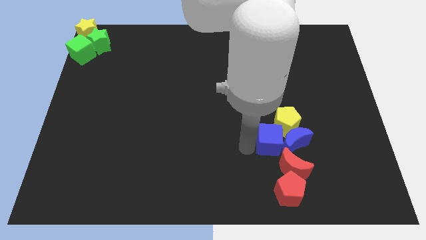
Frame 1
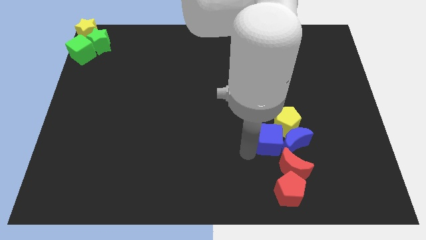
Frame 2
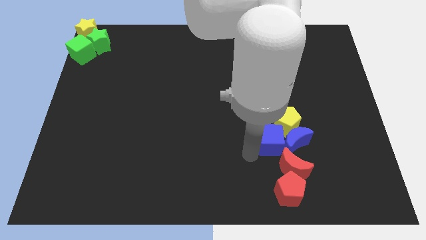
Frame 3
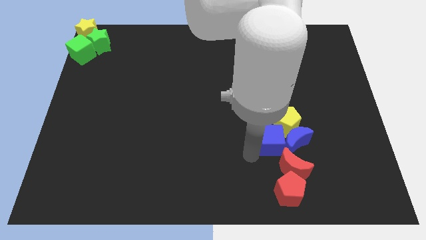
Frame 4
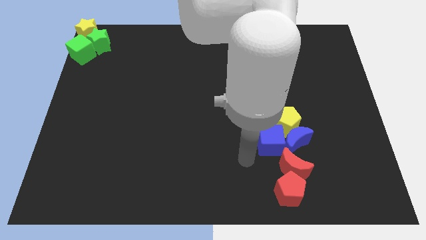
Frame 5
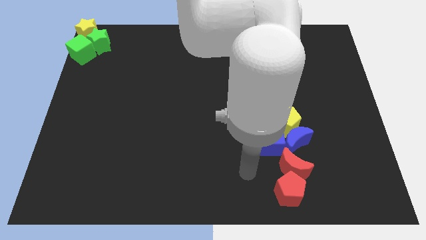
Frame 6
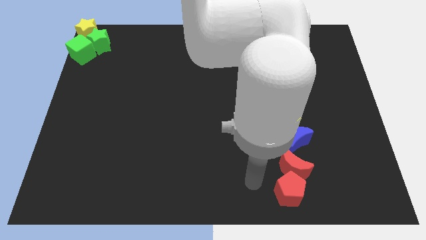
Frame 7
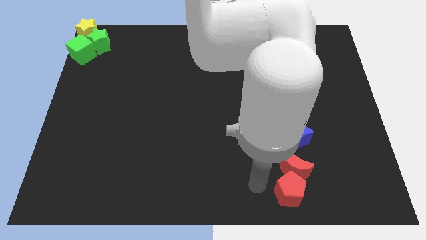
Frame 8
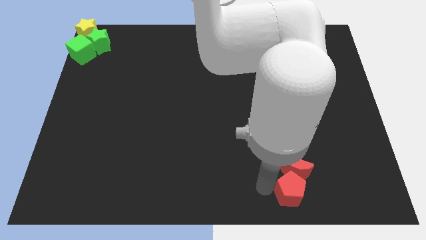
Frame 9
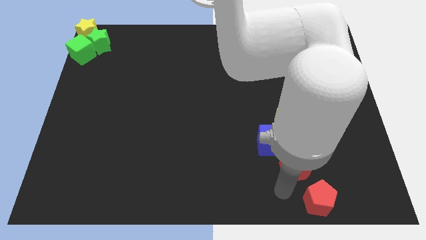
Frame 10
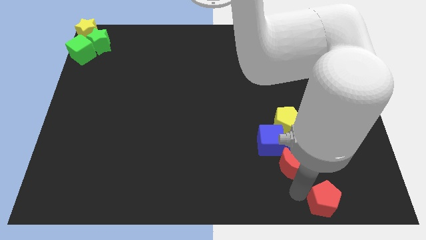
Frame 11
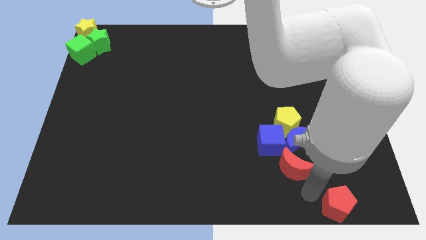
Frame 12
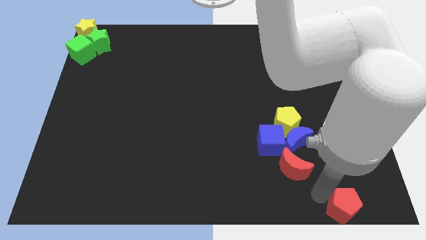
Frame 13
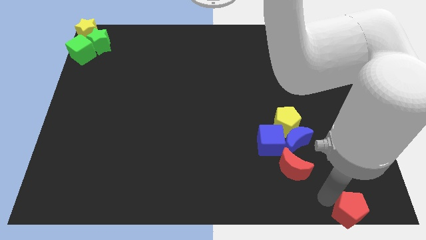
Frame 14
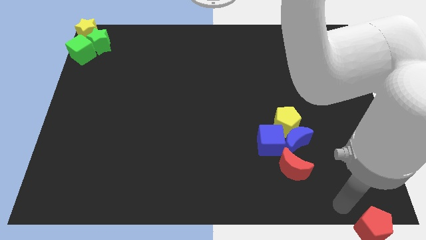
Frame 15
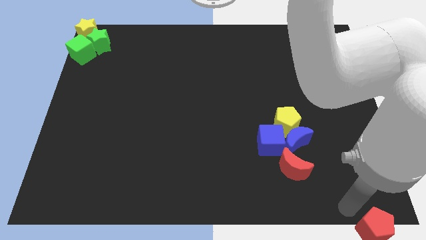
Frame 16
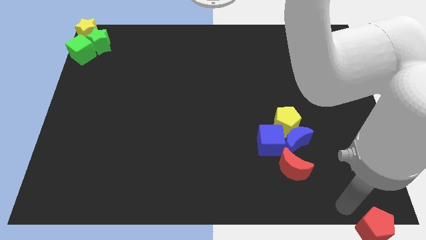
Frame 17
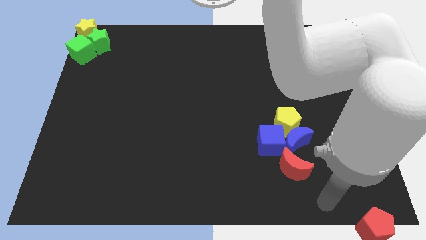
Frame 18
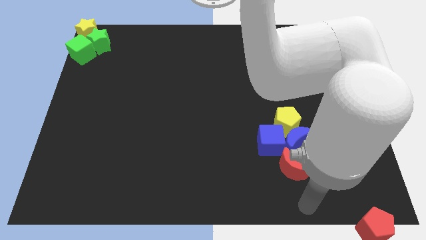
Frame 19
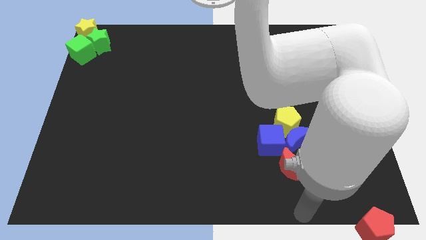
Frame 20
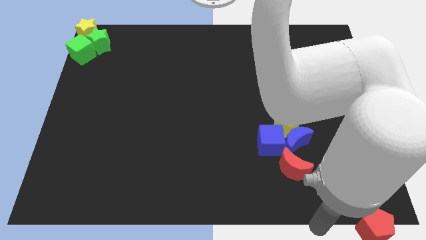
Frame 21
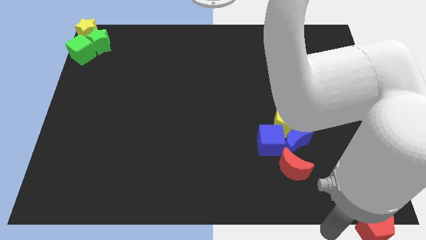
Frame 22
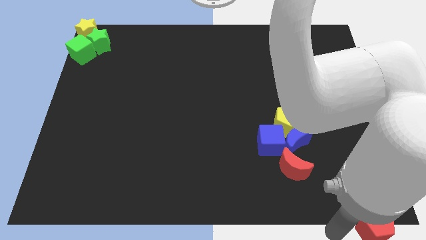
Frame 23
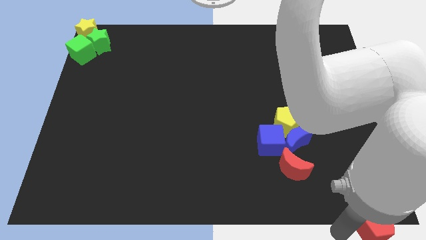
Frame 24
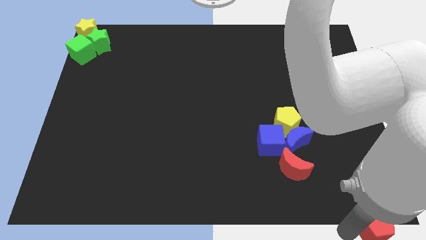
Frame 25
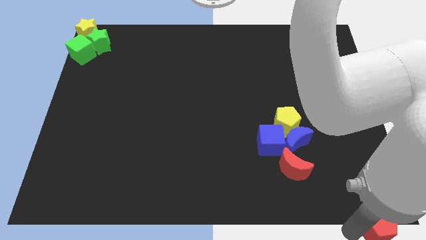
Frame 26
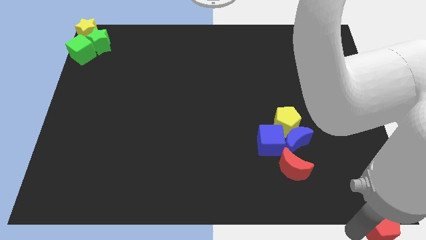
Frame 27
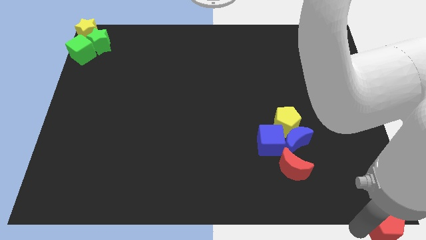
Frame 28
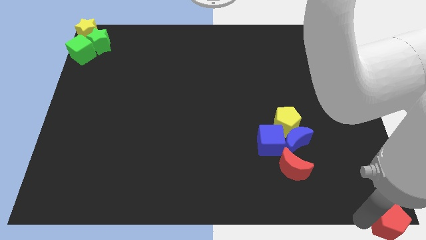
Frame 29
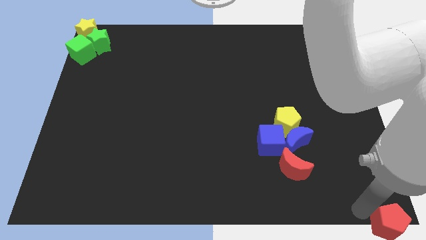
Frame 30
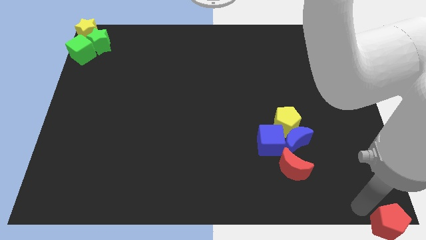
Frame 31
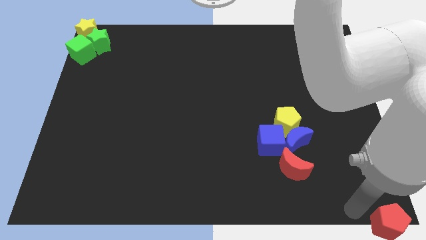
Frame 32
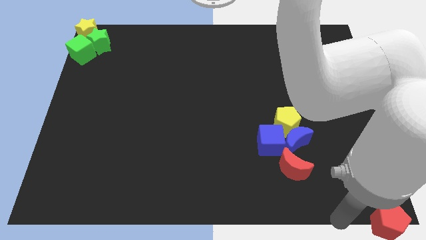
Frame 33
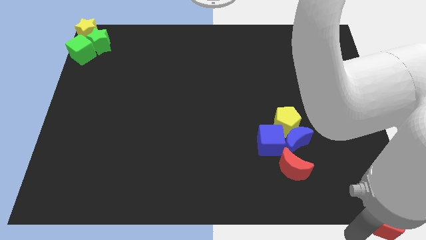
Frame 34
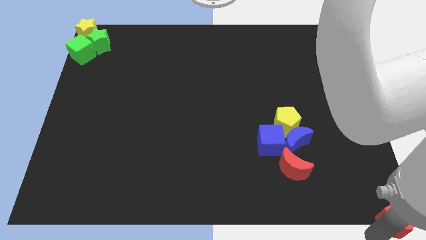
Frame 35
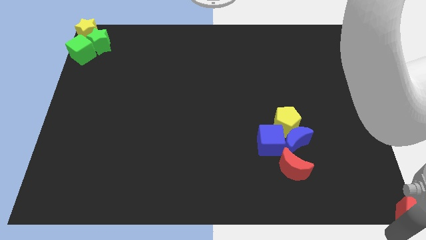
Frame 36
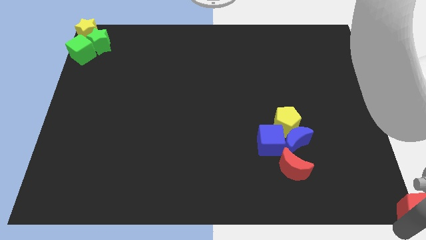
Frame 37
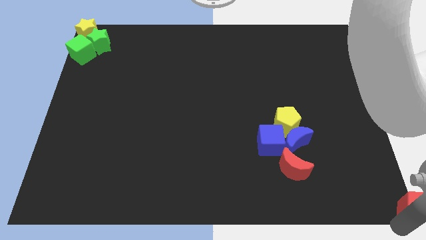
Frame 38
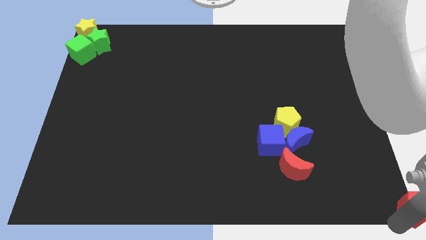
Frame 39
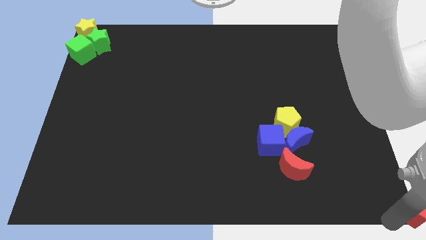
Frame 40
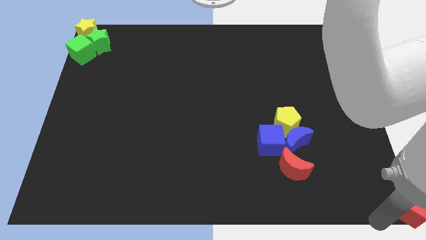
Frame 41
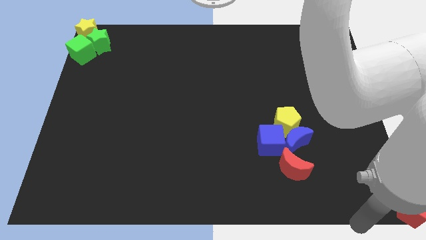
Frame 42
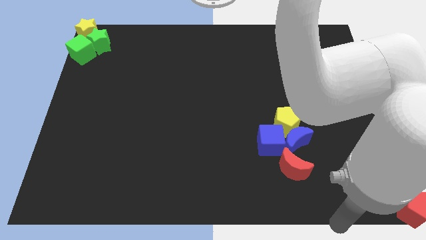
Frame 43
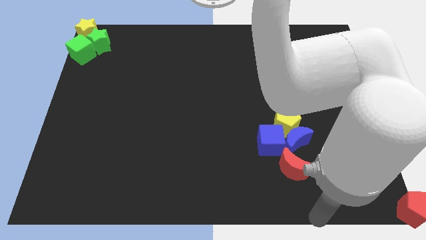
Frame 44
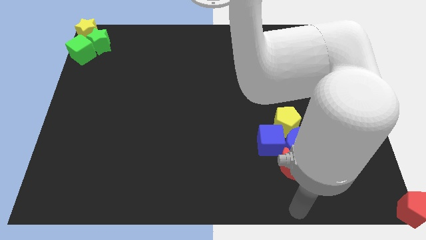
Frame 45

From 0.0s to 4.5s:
separate red pentagon from the group of blcoks

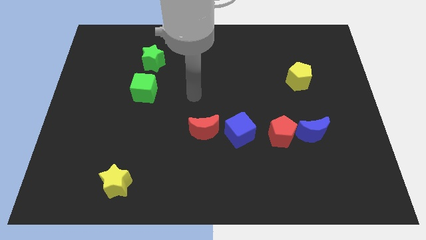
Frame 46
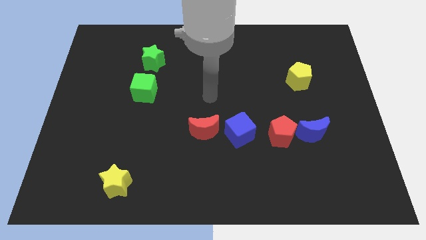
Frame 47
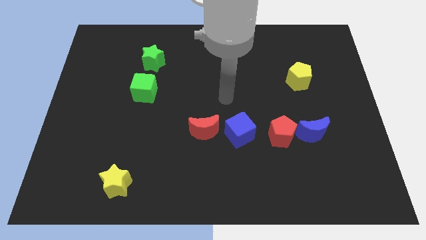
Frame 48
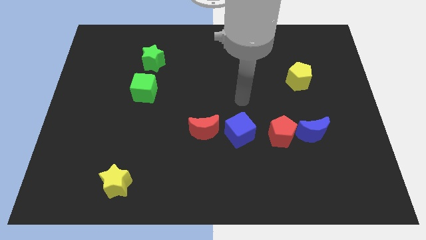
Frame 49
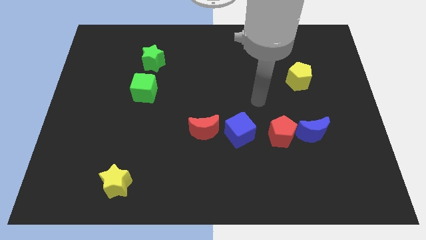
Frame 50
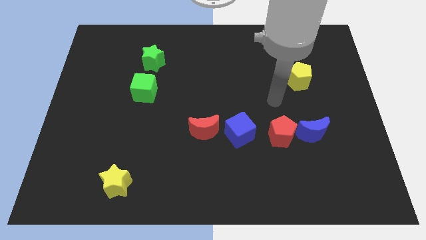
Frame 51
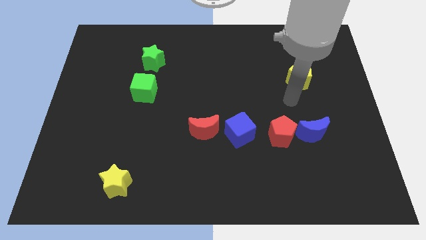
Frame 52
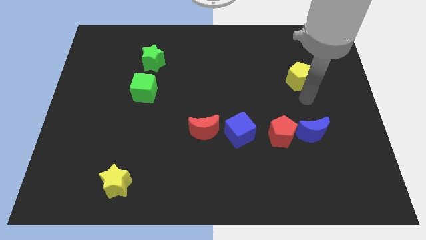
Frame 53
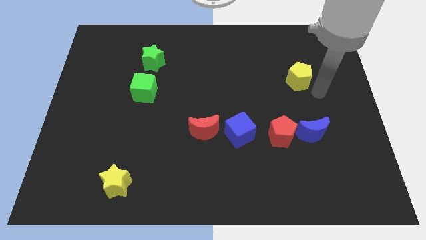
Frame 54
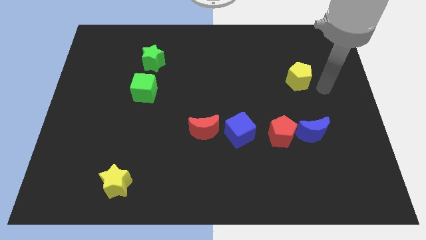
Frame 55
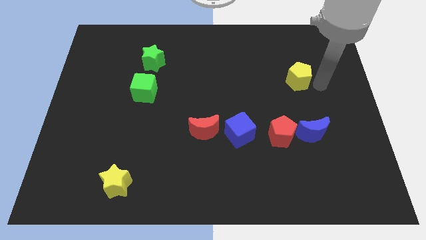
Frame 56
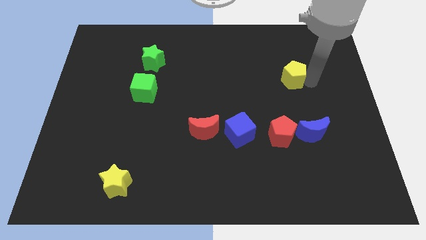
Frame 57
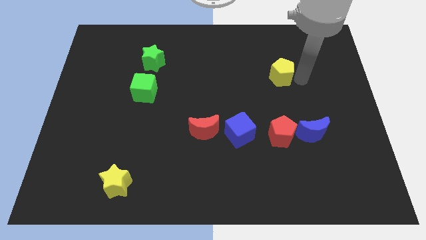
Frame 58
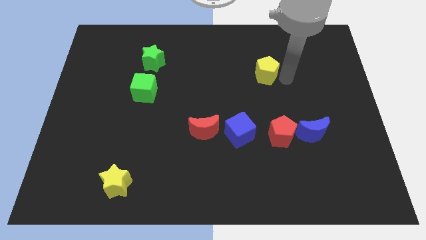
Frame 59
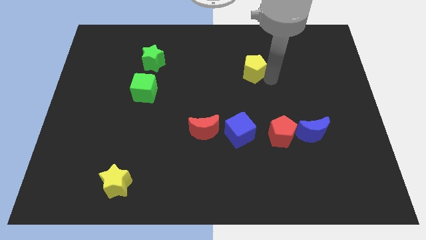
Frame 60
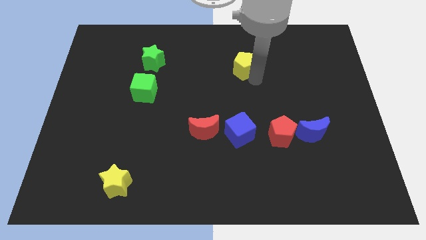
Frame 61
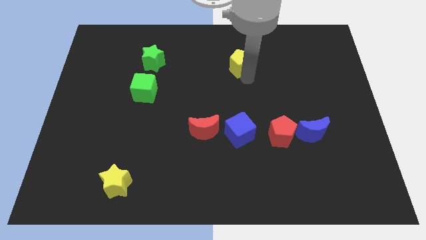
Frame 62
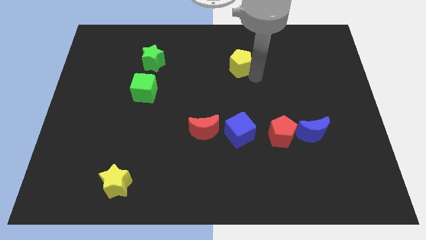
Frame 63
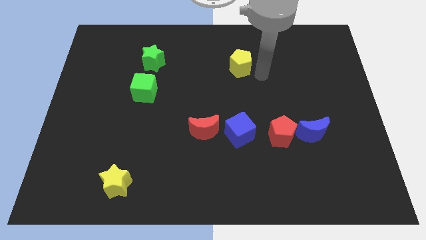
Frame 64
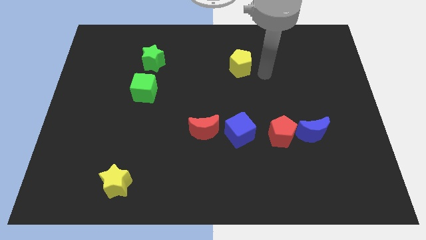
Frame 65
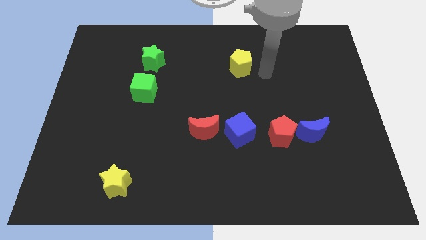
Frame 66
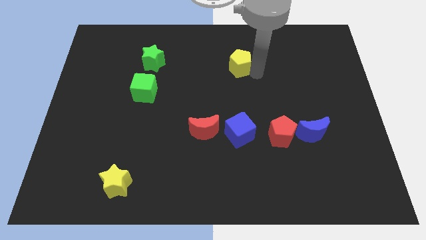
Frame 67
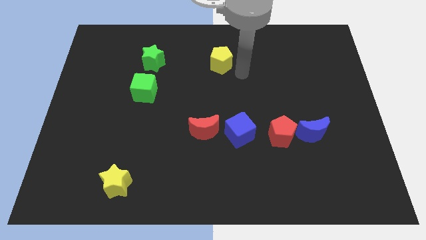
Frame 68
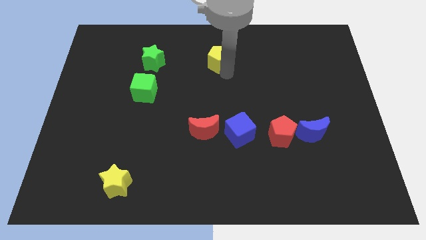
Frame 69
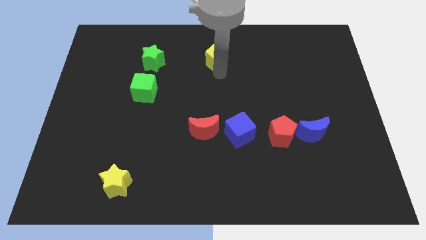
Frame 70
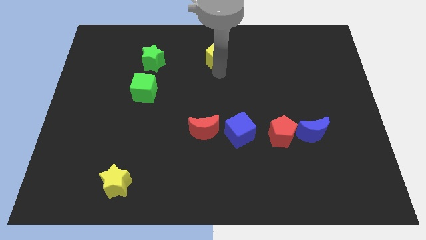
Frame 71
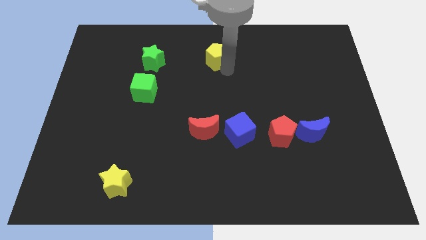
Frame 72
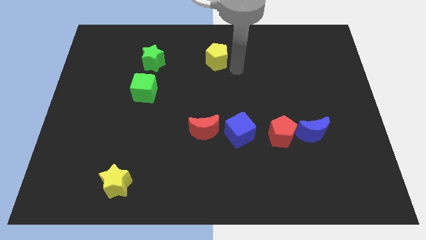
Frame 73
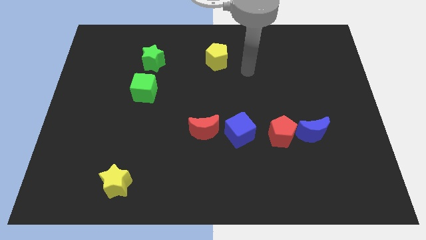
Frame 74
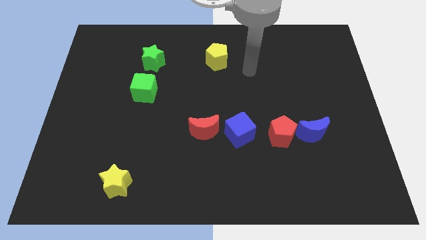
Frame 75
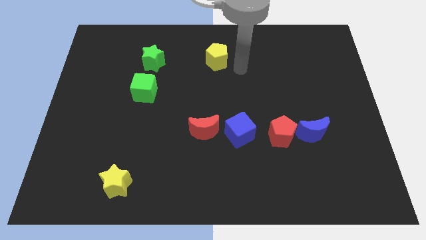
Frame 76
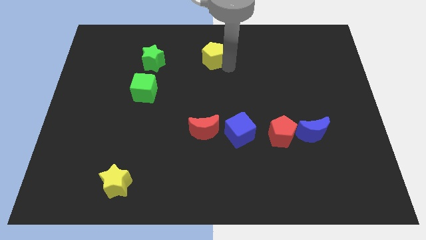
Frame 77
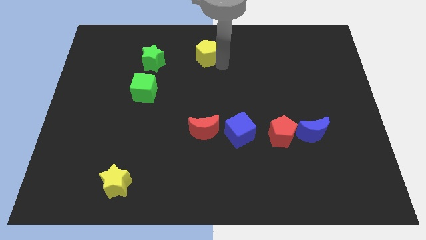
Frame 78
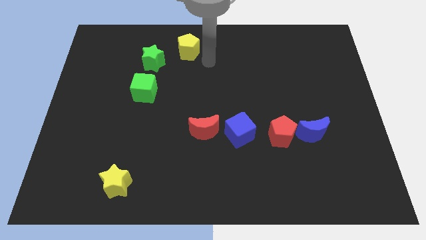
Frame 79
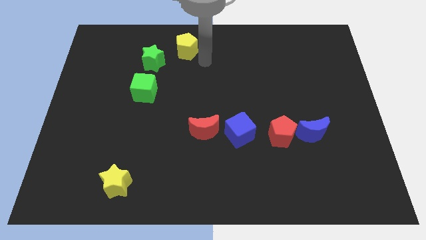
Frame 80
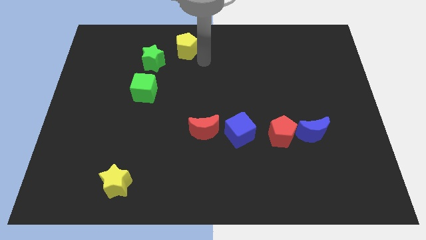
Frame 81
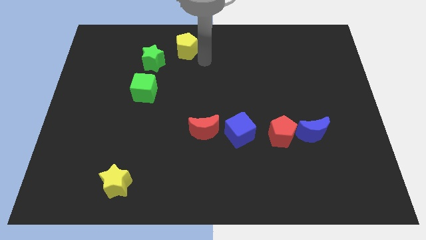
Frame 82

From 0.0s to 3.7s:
move yellow pentagon towards top left

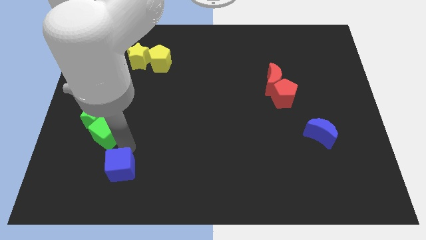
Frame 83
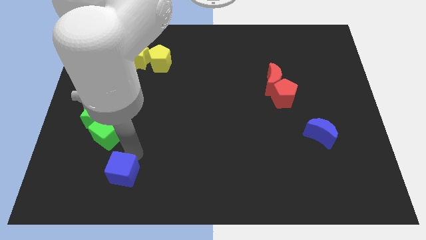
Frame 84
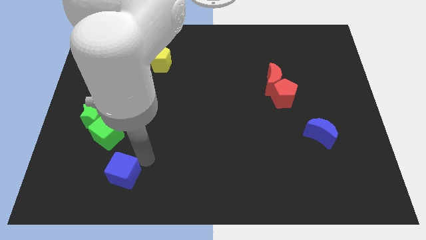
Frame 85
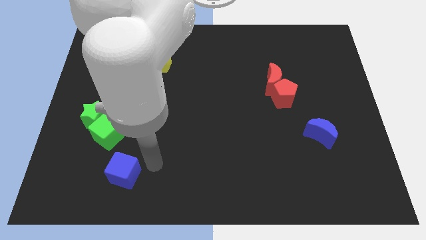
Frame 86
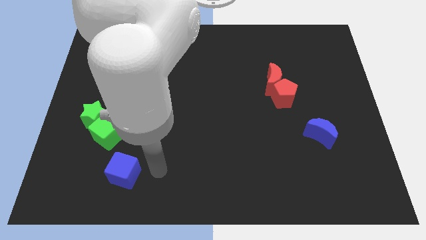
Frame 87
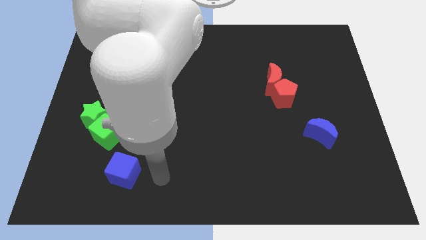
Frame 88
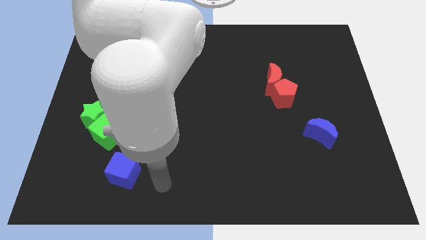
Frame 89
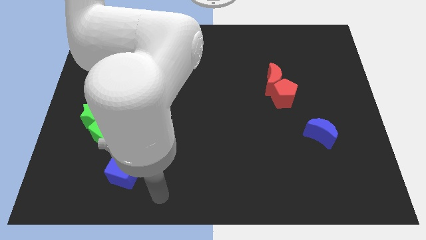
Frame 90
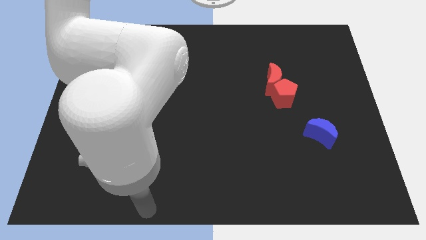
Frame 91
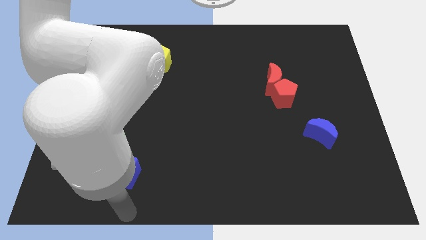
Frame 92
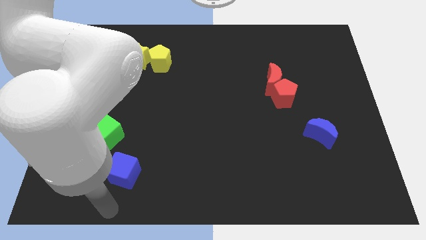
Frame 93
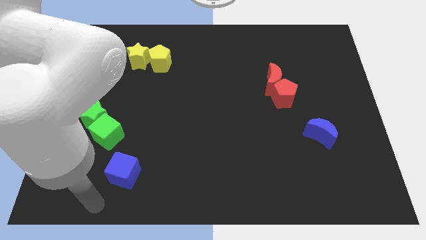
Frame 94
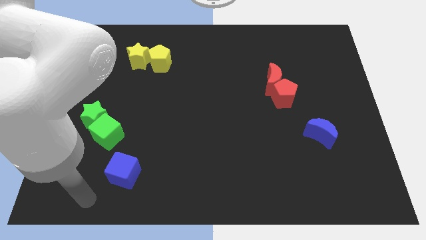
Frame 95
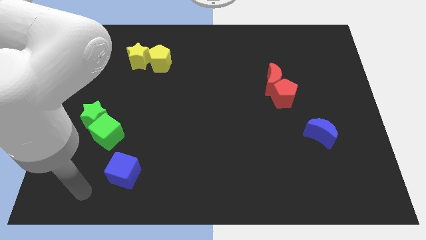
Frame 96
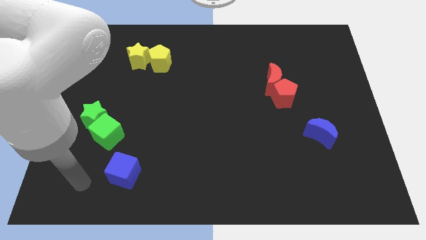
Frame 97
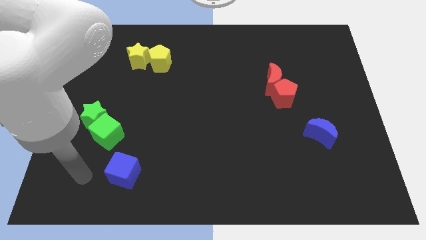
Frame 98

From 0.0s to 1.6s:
move your arm to the left of the blue cube
